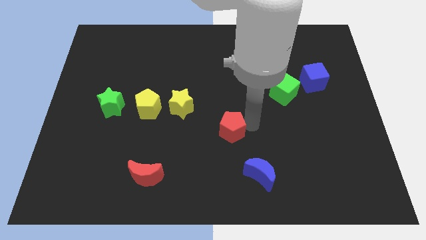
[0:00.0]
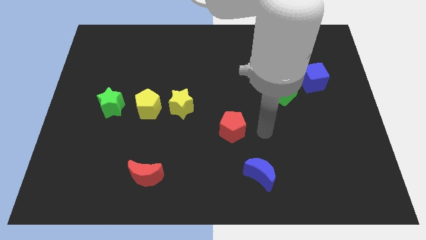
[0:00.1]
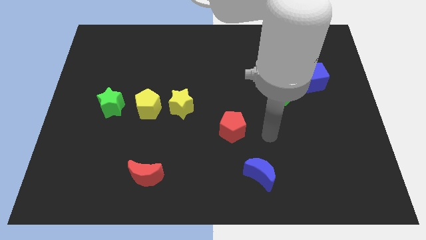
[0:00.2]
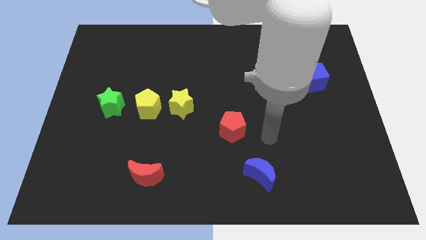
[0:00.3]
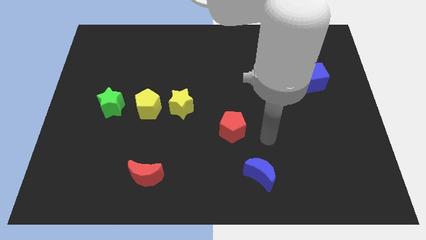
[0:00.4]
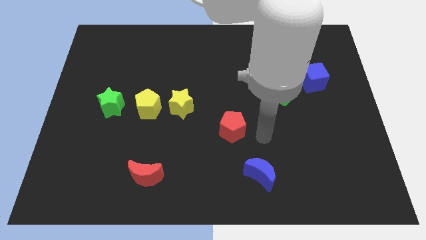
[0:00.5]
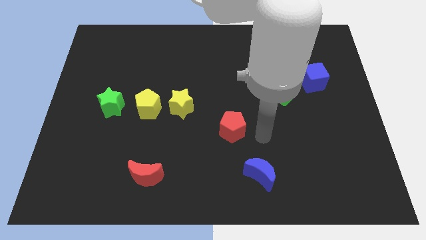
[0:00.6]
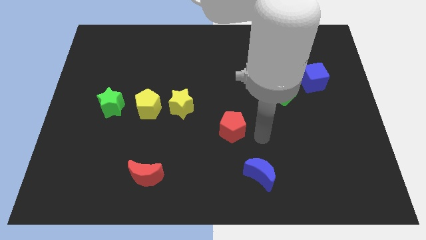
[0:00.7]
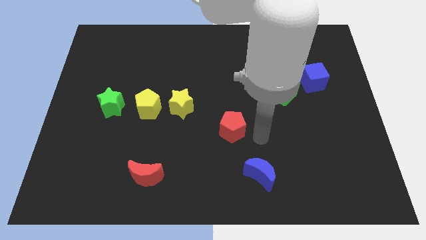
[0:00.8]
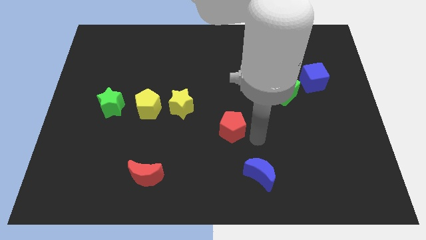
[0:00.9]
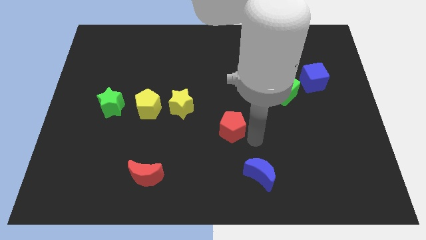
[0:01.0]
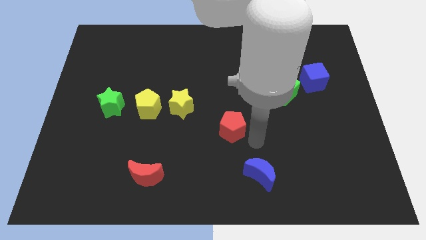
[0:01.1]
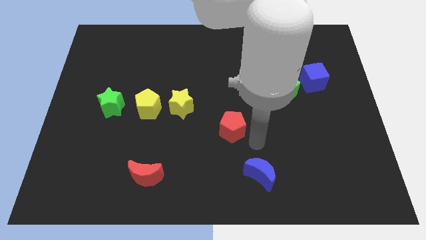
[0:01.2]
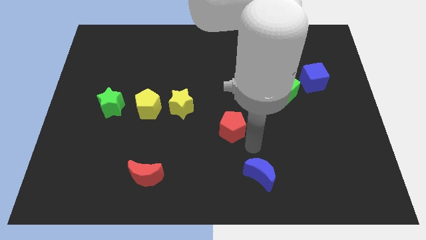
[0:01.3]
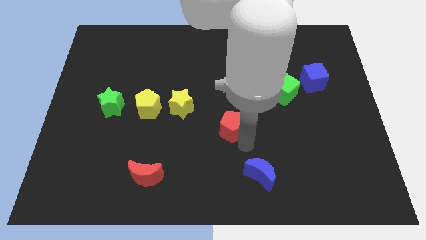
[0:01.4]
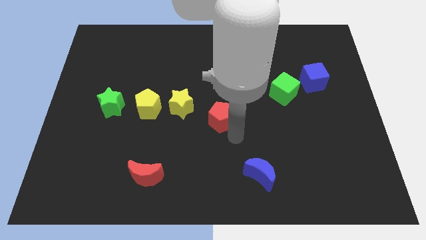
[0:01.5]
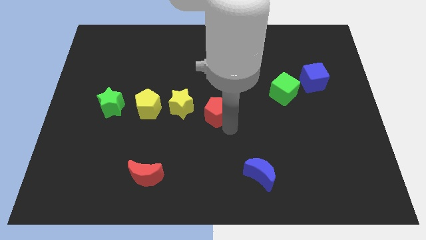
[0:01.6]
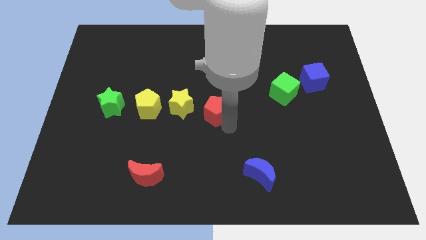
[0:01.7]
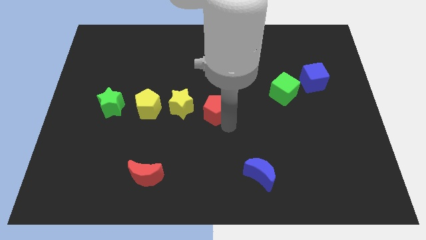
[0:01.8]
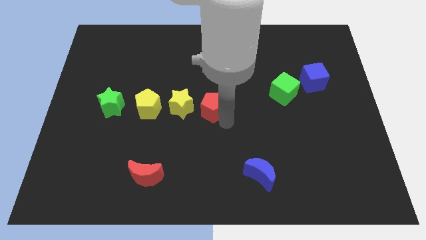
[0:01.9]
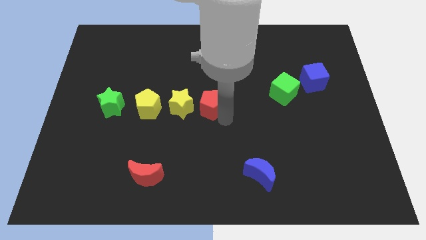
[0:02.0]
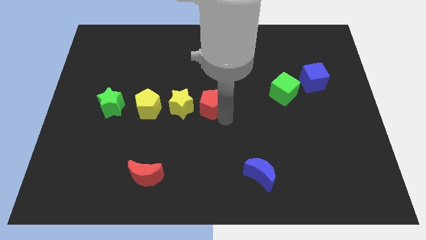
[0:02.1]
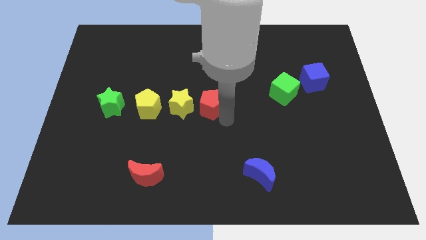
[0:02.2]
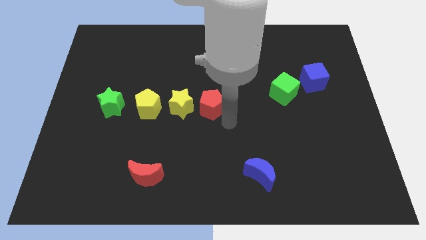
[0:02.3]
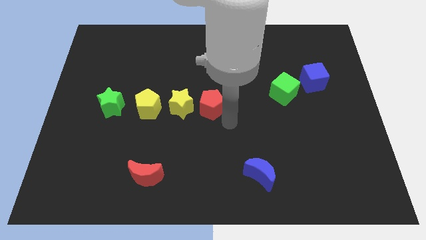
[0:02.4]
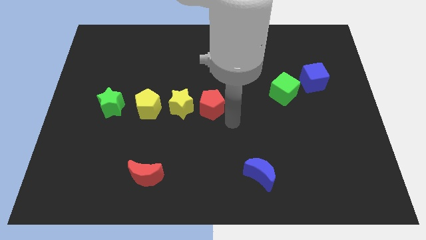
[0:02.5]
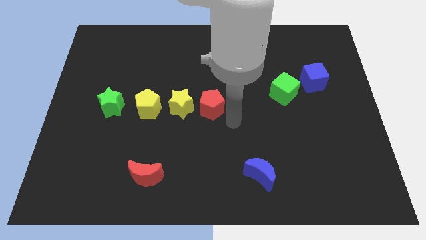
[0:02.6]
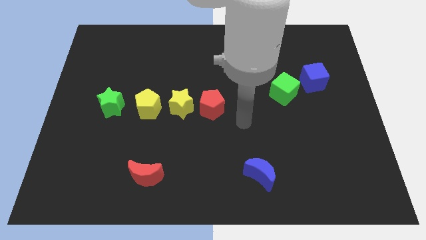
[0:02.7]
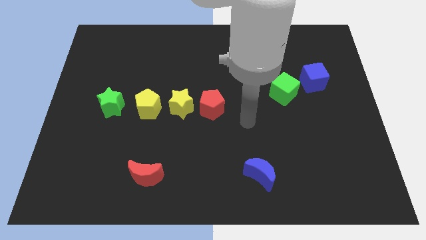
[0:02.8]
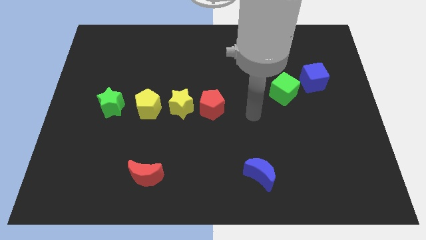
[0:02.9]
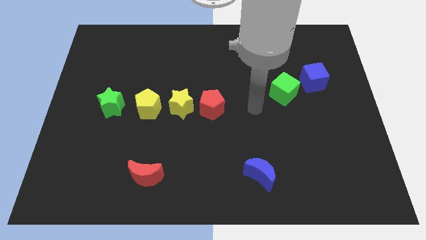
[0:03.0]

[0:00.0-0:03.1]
place the red pentagon at the center of the board

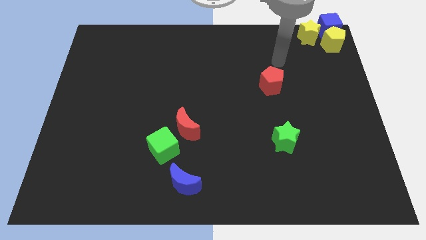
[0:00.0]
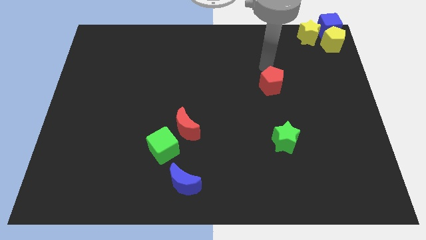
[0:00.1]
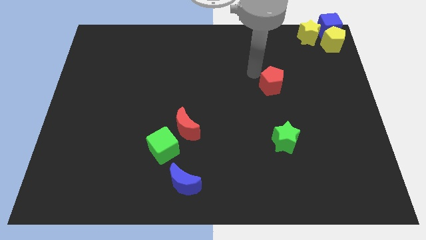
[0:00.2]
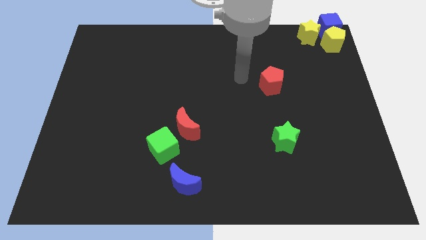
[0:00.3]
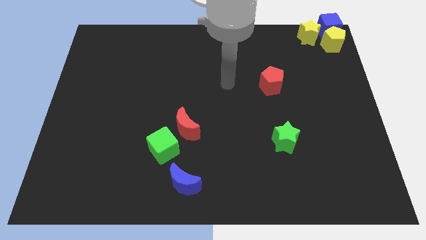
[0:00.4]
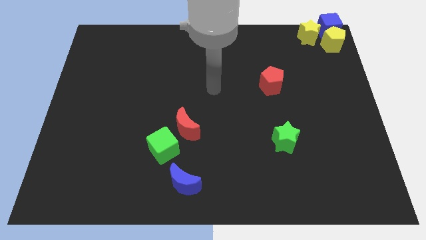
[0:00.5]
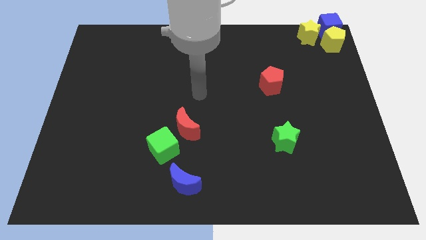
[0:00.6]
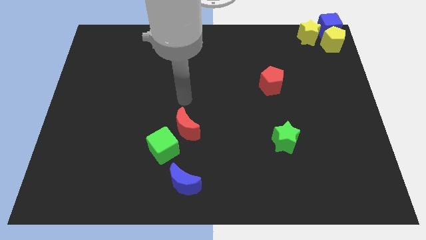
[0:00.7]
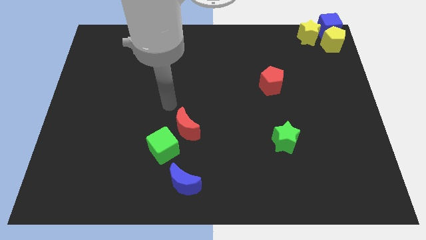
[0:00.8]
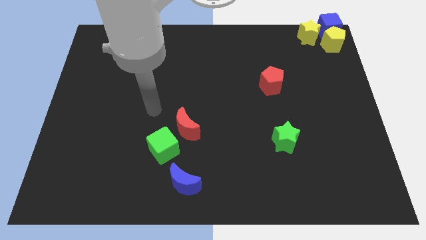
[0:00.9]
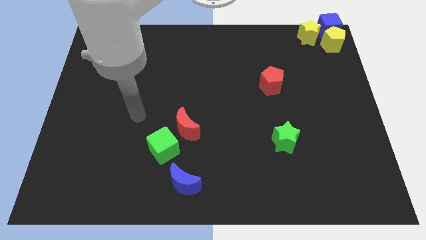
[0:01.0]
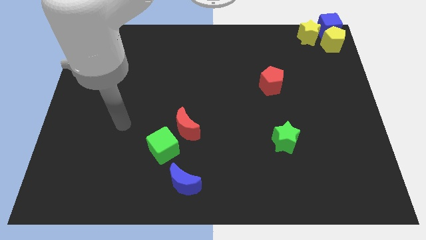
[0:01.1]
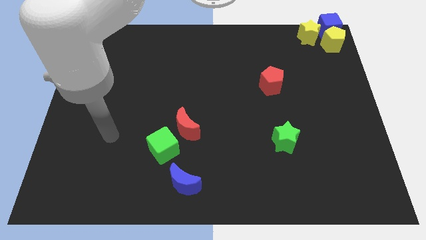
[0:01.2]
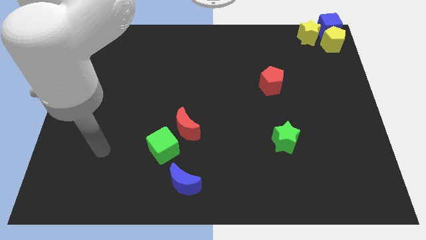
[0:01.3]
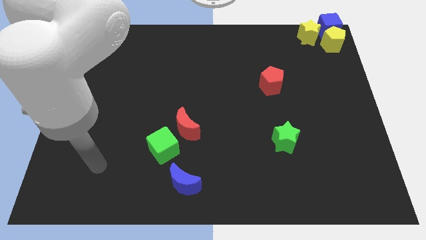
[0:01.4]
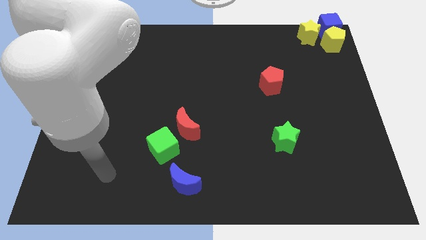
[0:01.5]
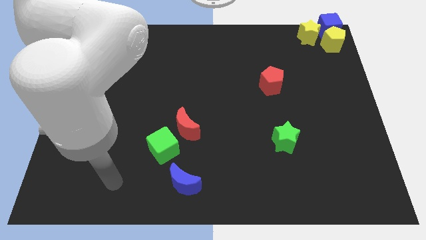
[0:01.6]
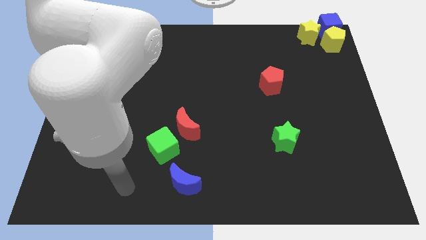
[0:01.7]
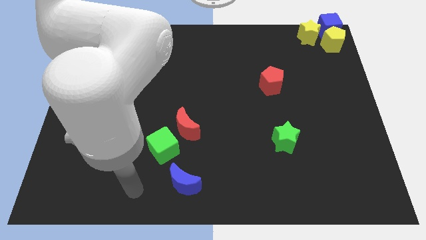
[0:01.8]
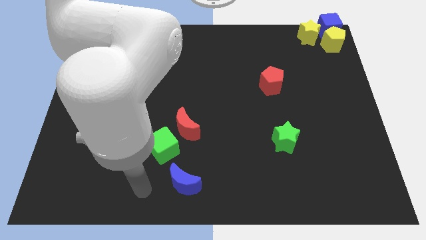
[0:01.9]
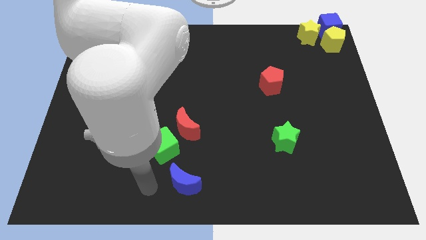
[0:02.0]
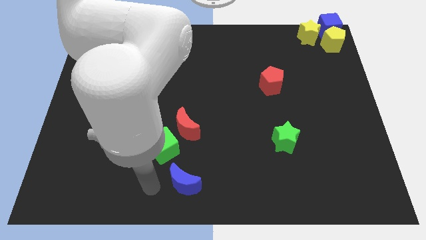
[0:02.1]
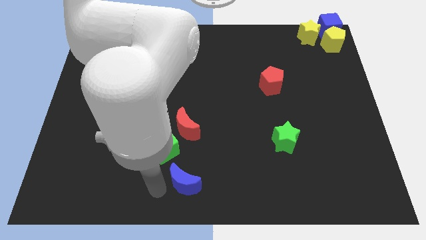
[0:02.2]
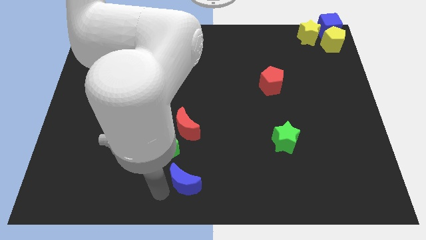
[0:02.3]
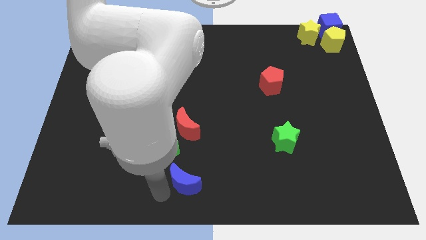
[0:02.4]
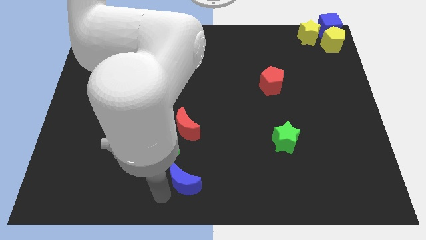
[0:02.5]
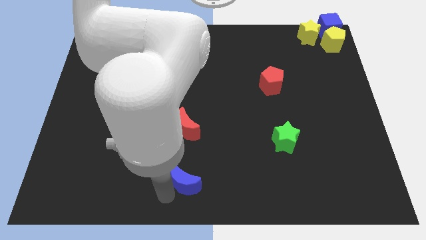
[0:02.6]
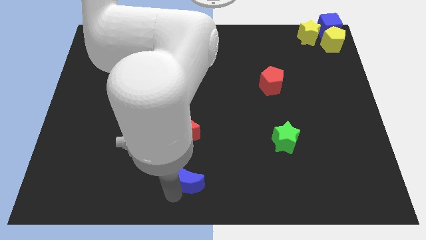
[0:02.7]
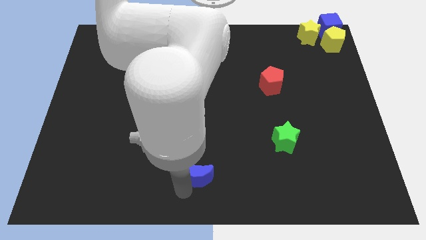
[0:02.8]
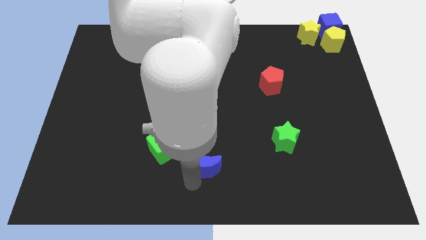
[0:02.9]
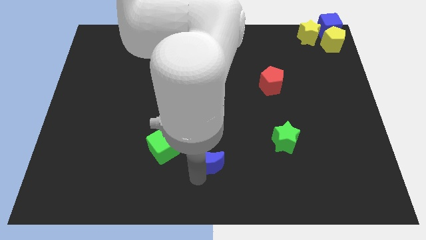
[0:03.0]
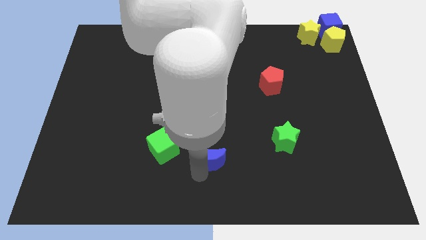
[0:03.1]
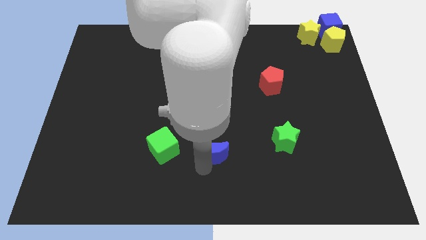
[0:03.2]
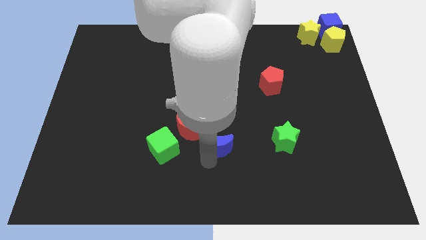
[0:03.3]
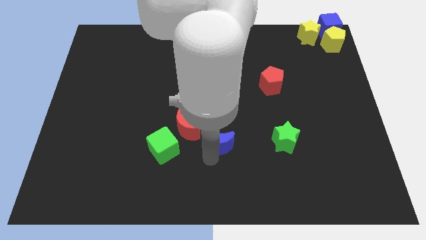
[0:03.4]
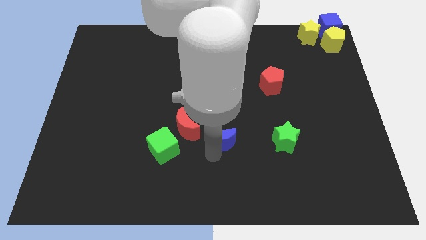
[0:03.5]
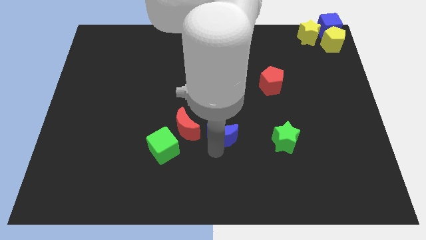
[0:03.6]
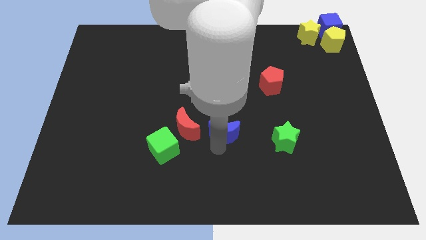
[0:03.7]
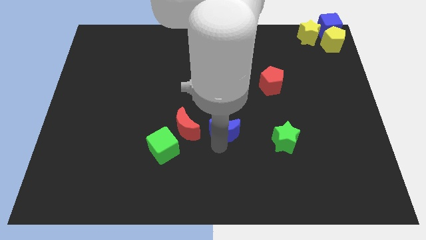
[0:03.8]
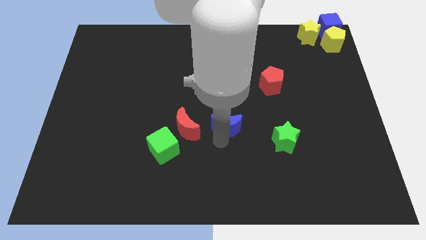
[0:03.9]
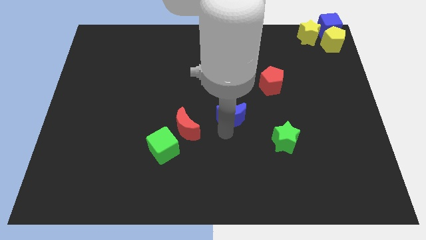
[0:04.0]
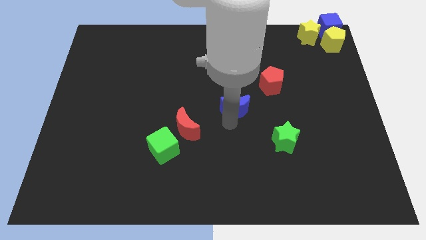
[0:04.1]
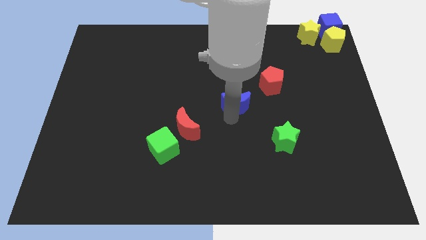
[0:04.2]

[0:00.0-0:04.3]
place the blue moon in between the red crescent and the red pentagon

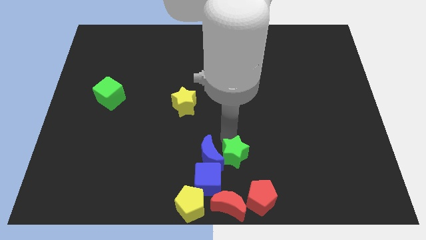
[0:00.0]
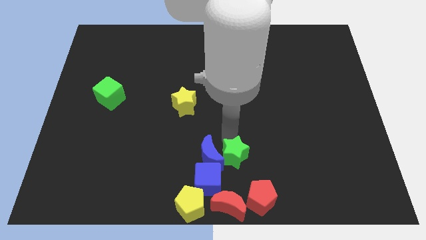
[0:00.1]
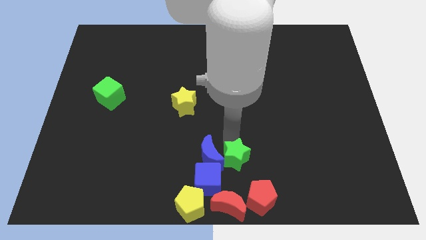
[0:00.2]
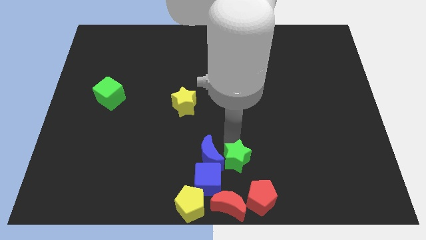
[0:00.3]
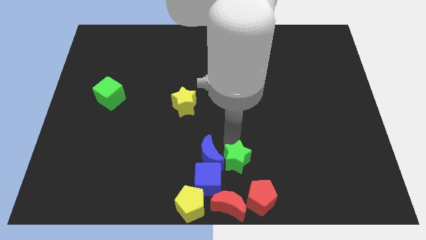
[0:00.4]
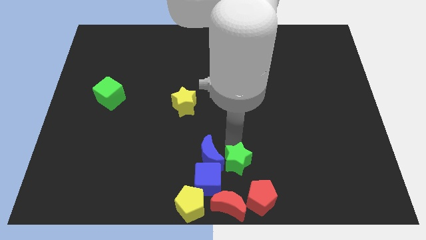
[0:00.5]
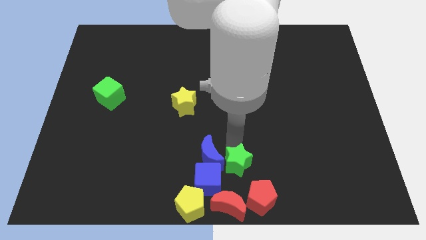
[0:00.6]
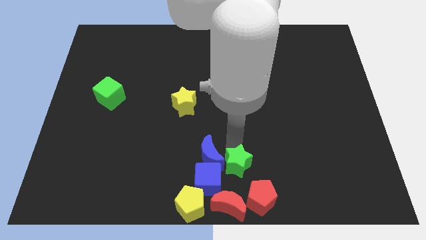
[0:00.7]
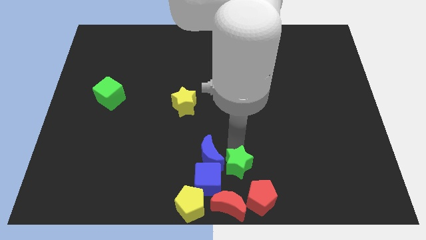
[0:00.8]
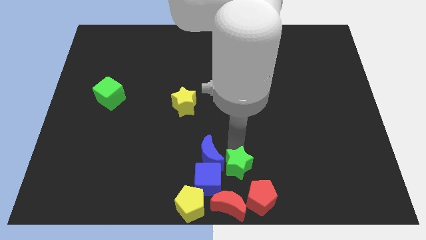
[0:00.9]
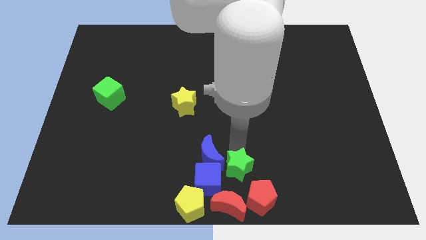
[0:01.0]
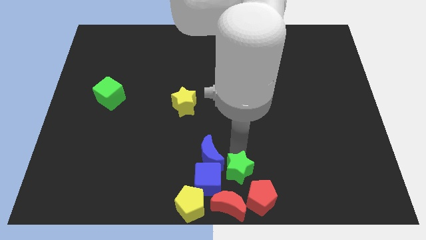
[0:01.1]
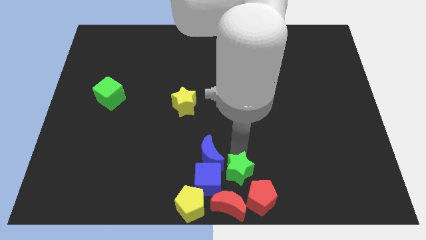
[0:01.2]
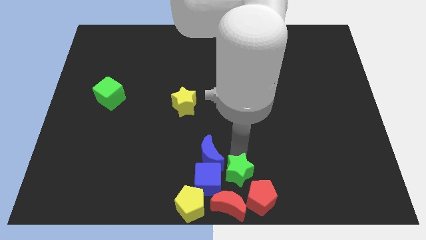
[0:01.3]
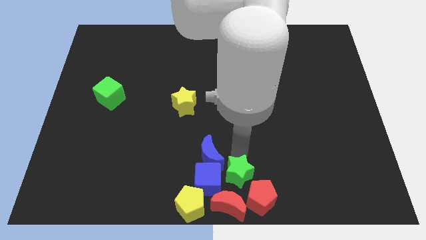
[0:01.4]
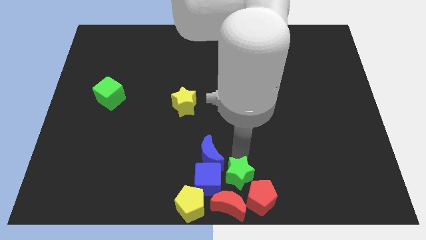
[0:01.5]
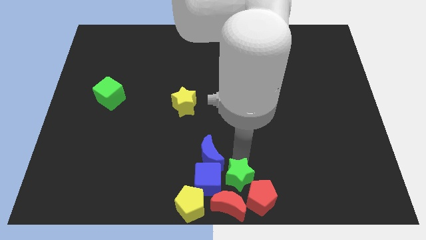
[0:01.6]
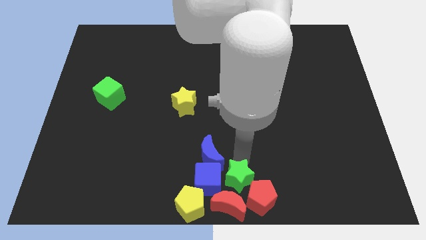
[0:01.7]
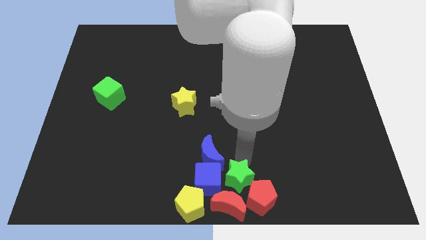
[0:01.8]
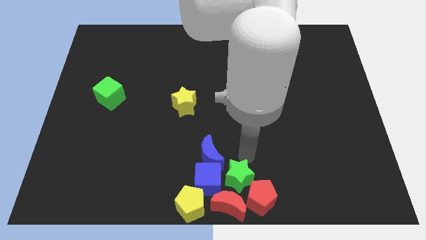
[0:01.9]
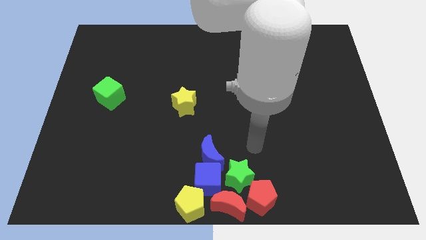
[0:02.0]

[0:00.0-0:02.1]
add the green star to the group of blocks at the bottom center of the board
